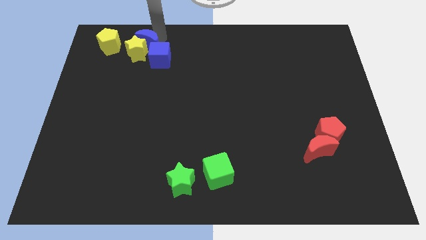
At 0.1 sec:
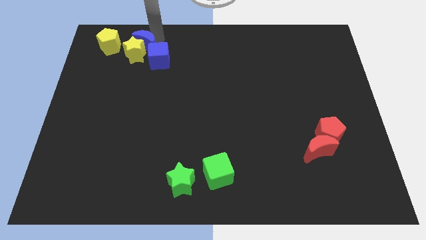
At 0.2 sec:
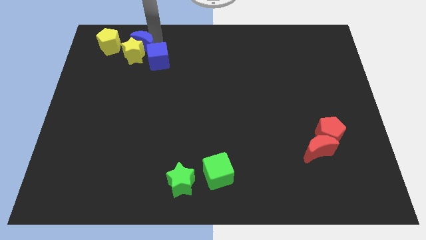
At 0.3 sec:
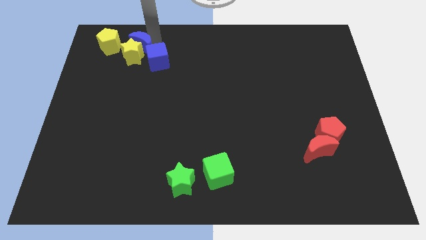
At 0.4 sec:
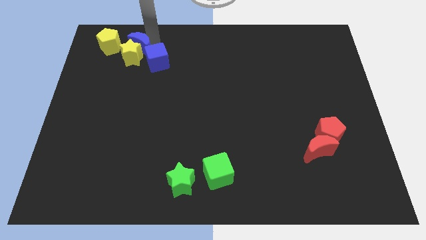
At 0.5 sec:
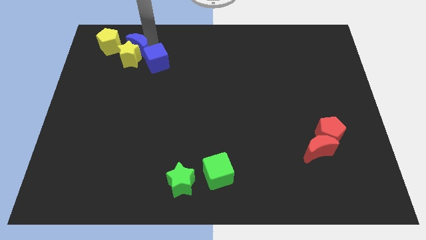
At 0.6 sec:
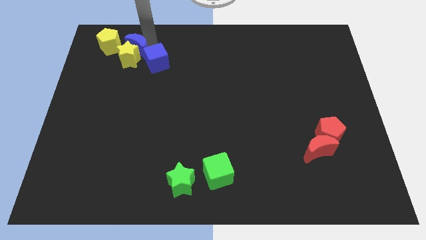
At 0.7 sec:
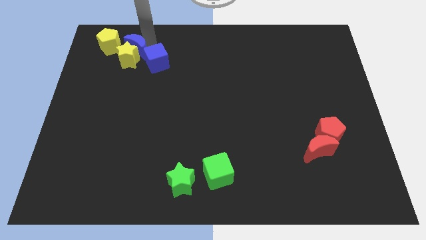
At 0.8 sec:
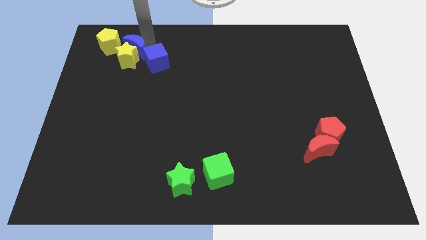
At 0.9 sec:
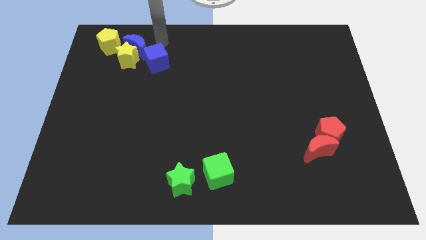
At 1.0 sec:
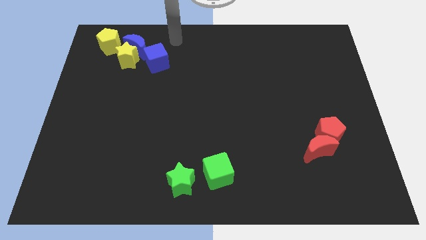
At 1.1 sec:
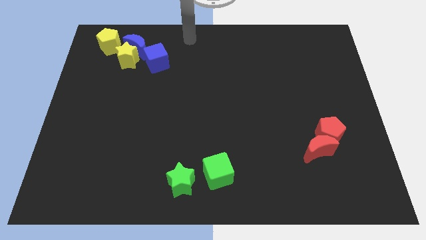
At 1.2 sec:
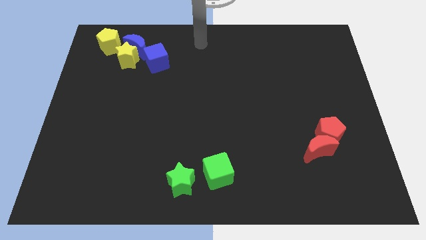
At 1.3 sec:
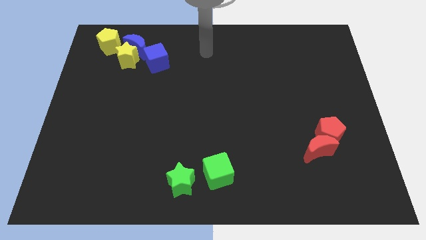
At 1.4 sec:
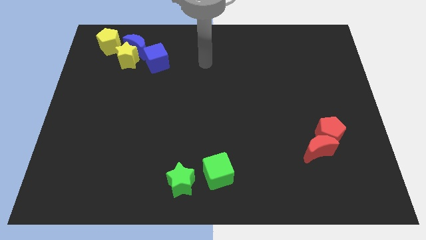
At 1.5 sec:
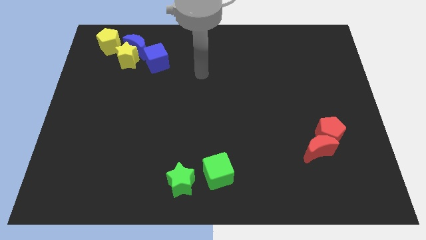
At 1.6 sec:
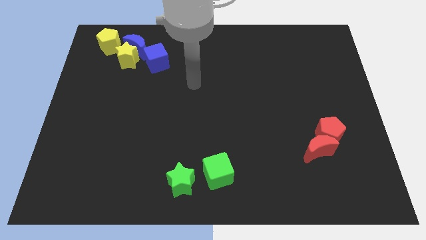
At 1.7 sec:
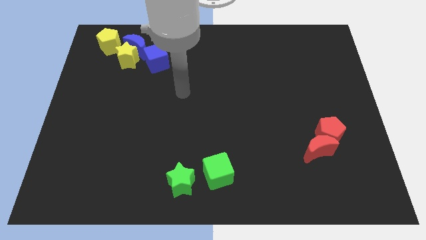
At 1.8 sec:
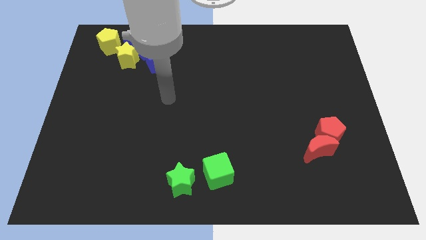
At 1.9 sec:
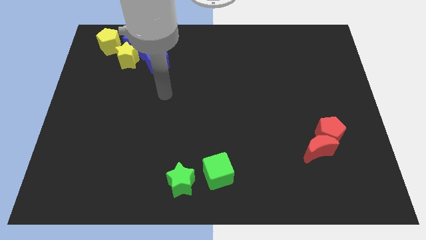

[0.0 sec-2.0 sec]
move the blue moon into yellow star

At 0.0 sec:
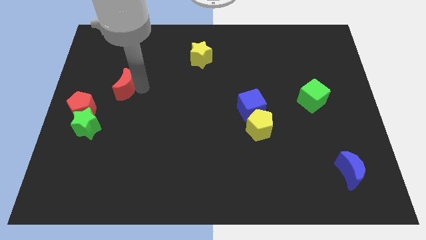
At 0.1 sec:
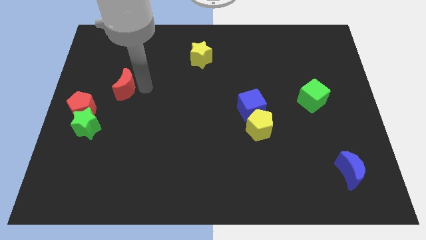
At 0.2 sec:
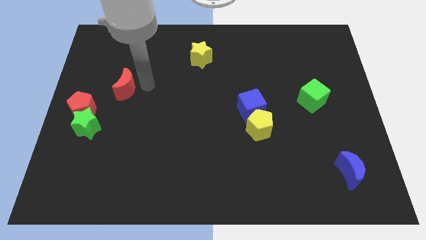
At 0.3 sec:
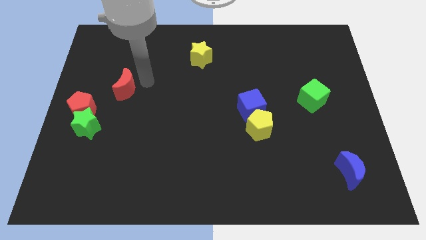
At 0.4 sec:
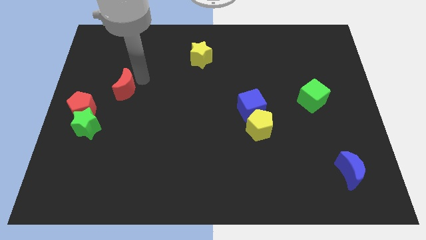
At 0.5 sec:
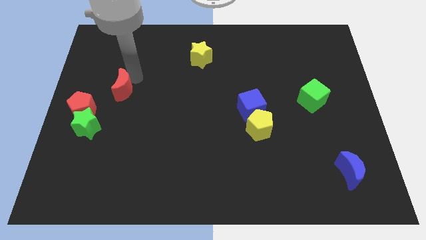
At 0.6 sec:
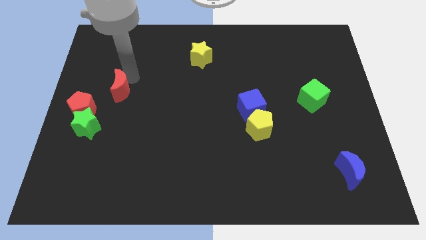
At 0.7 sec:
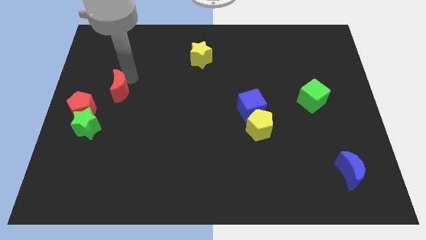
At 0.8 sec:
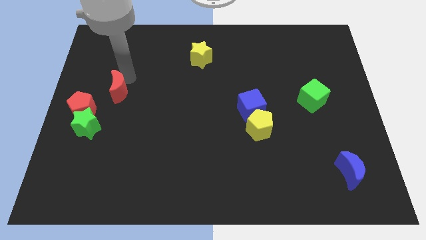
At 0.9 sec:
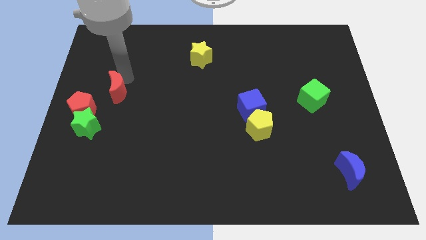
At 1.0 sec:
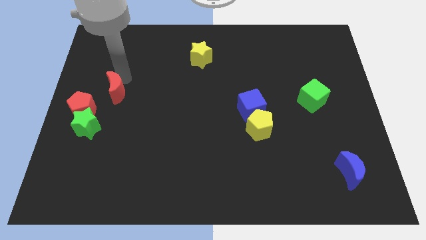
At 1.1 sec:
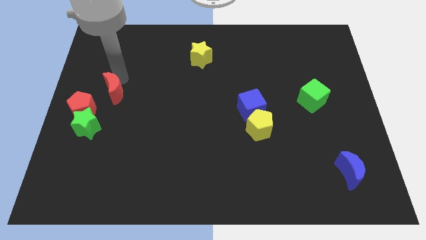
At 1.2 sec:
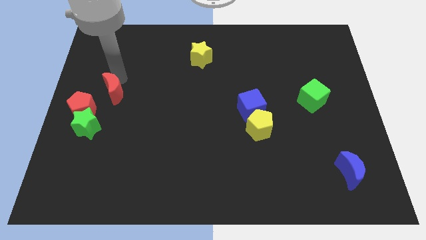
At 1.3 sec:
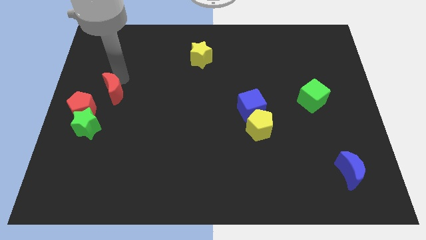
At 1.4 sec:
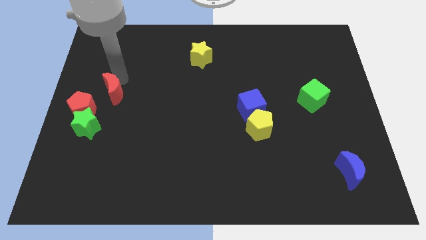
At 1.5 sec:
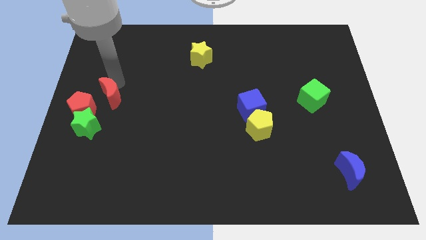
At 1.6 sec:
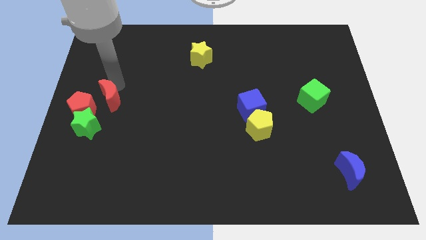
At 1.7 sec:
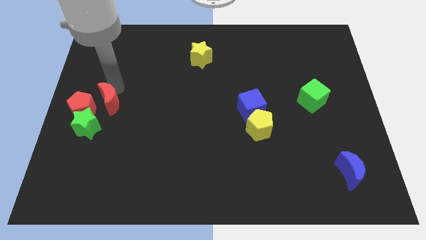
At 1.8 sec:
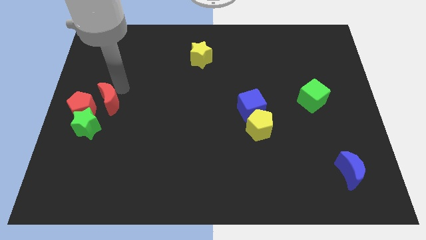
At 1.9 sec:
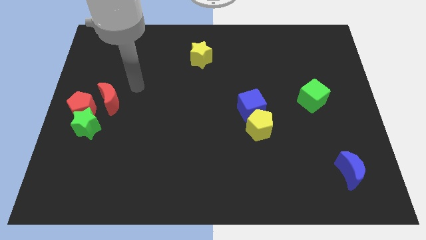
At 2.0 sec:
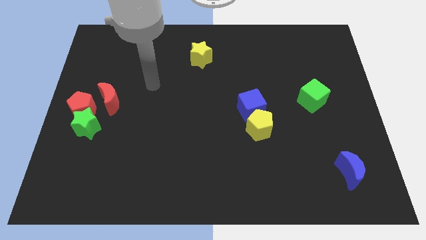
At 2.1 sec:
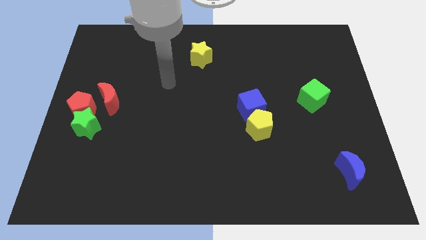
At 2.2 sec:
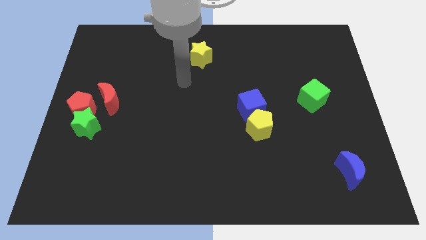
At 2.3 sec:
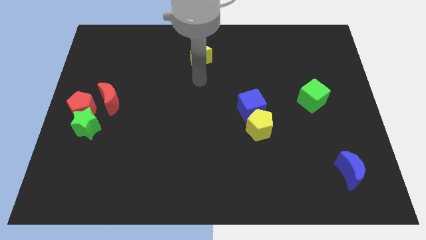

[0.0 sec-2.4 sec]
move the red moon right to the red pentagon

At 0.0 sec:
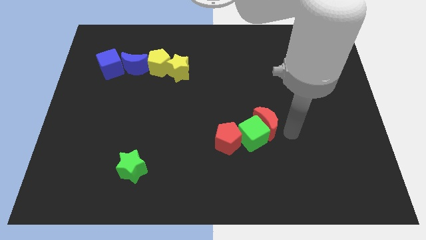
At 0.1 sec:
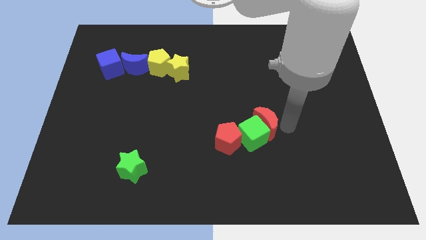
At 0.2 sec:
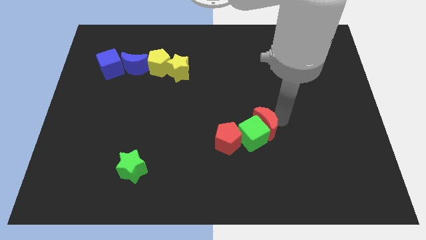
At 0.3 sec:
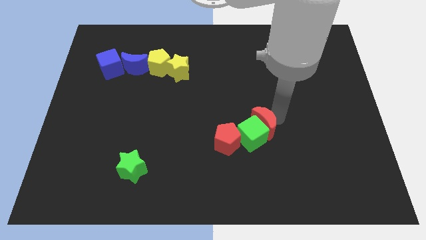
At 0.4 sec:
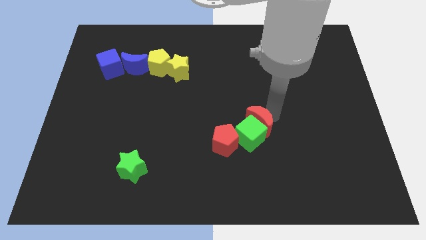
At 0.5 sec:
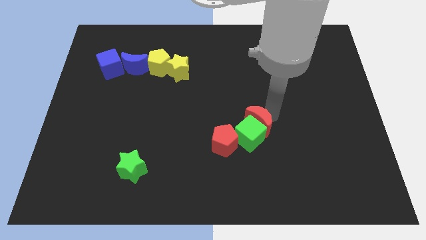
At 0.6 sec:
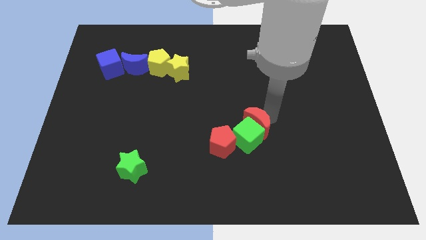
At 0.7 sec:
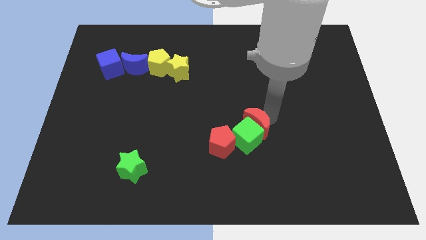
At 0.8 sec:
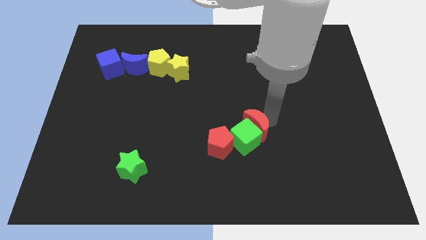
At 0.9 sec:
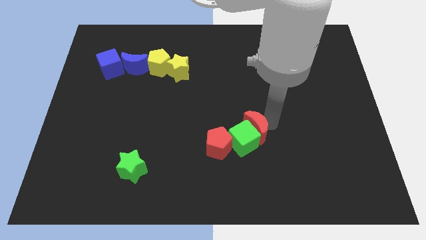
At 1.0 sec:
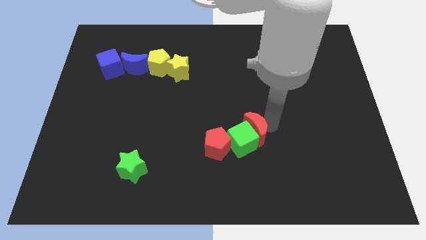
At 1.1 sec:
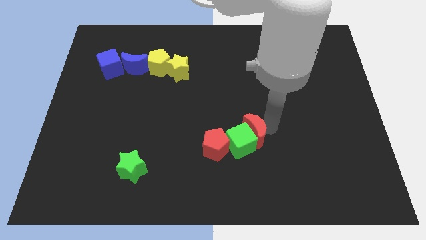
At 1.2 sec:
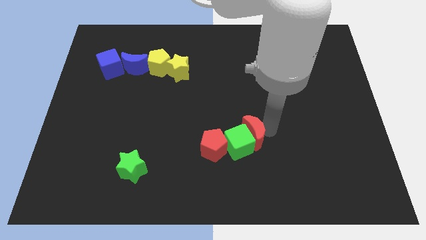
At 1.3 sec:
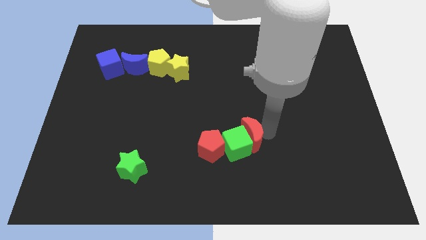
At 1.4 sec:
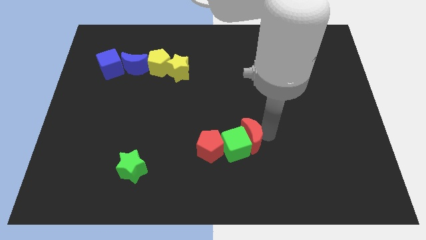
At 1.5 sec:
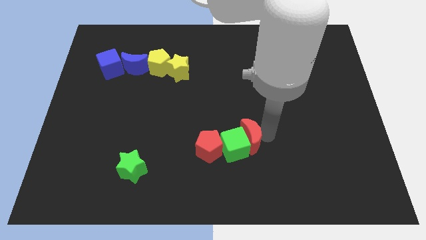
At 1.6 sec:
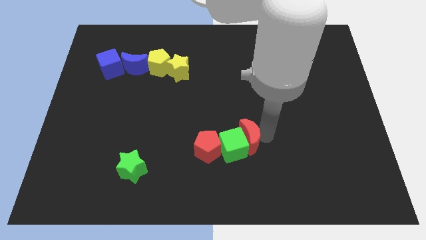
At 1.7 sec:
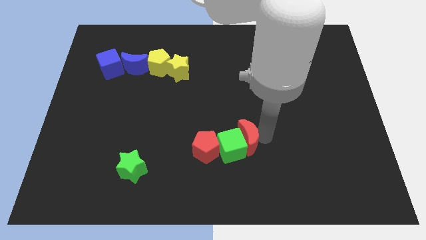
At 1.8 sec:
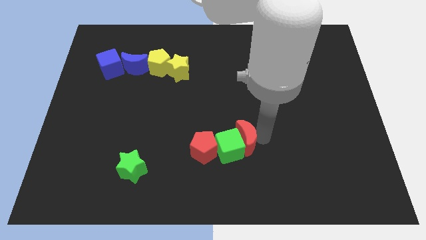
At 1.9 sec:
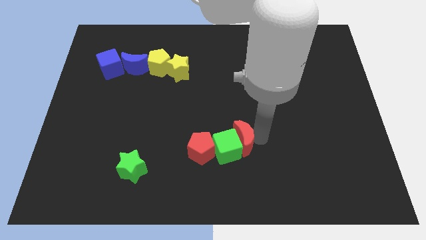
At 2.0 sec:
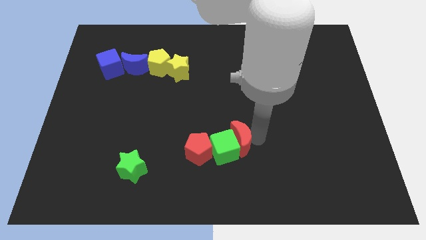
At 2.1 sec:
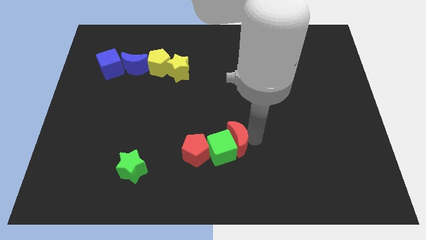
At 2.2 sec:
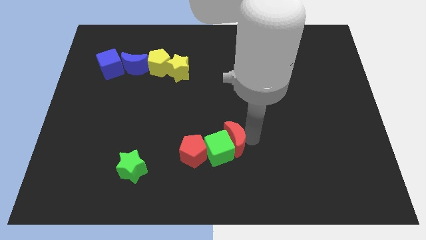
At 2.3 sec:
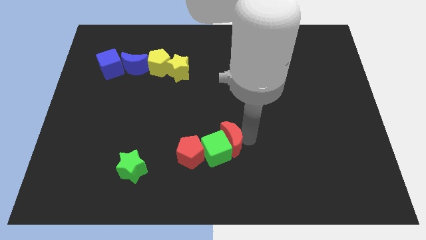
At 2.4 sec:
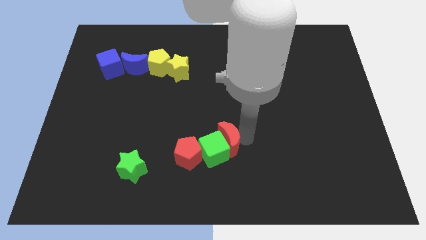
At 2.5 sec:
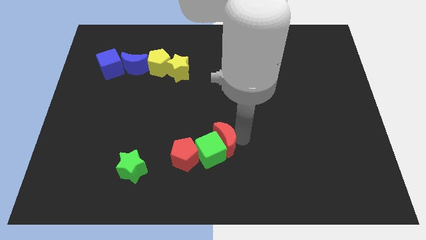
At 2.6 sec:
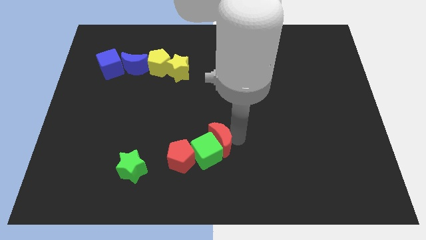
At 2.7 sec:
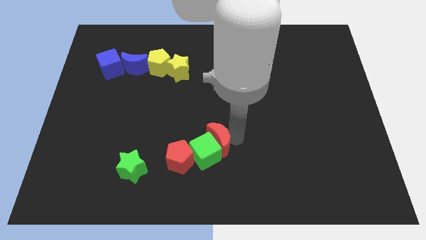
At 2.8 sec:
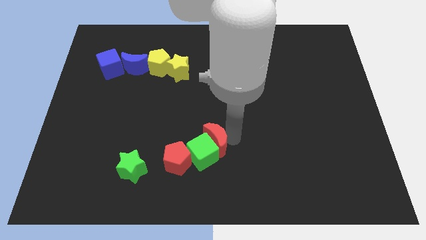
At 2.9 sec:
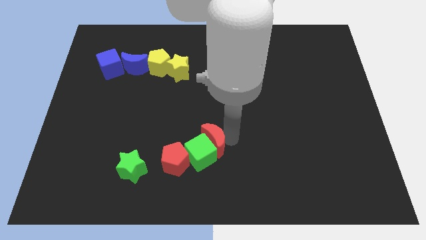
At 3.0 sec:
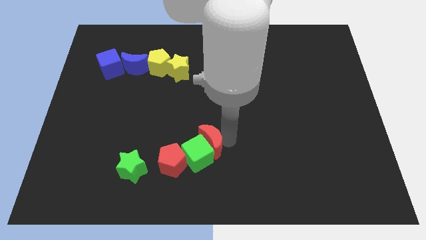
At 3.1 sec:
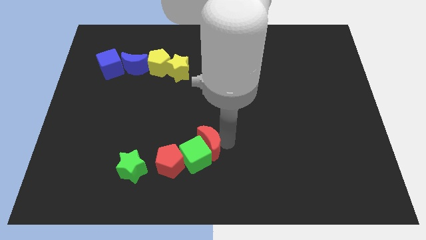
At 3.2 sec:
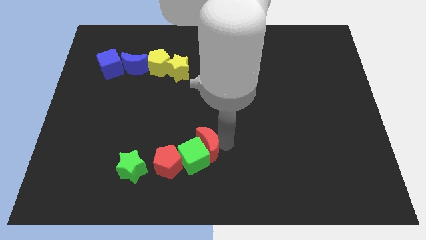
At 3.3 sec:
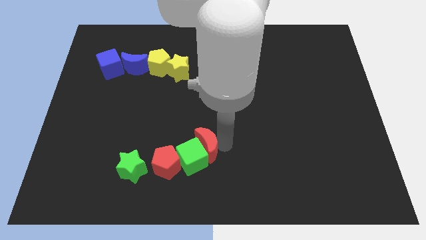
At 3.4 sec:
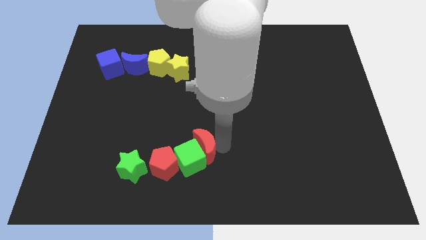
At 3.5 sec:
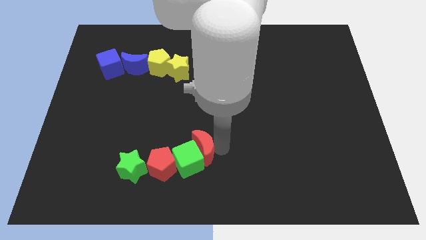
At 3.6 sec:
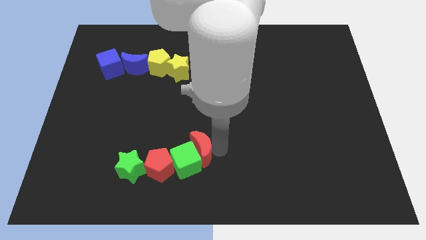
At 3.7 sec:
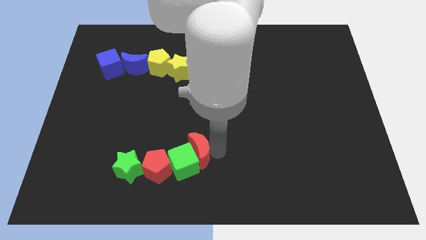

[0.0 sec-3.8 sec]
push both the red blocks and the green cube into the green star

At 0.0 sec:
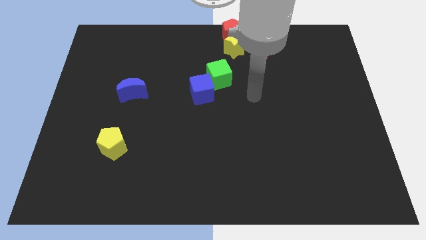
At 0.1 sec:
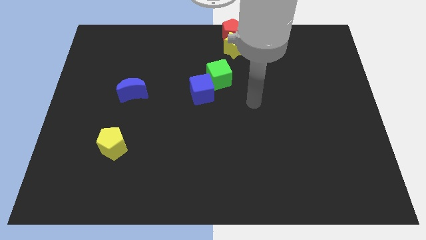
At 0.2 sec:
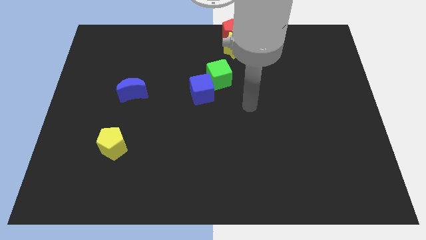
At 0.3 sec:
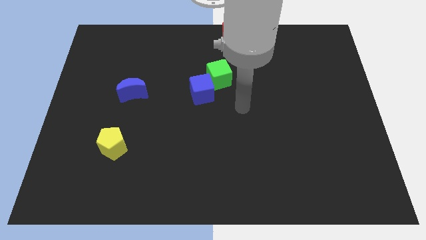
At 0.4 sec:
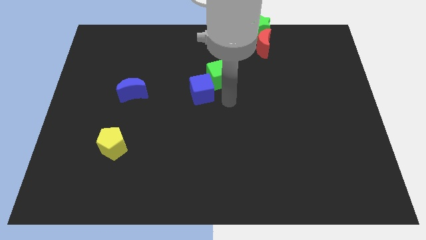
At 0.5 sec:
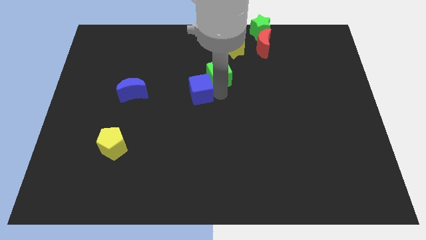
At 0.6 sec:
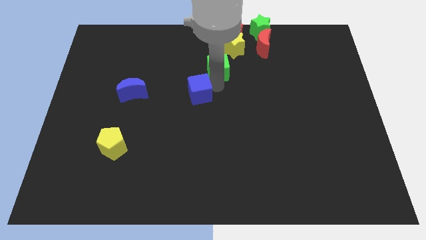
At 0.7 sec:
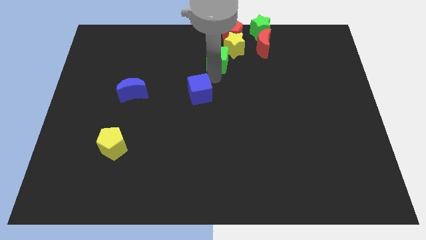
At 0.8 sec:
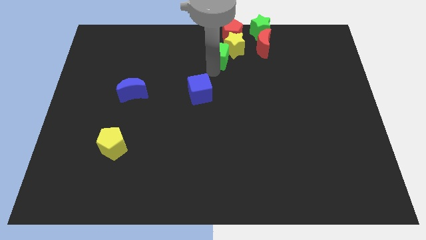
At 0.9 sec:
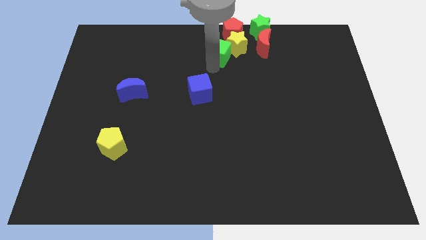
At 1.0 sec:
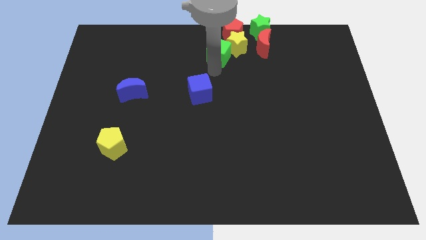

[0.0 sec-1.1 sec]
push the green cube into the yellow star
